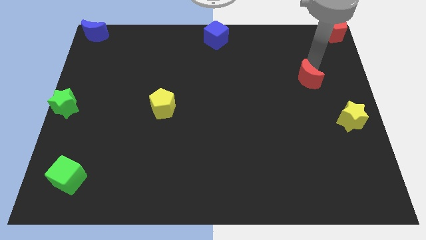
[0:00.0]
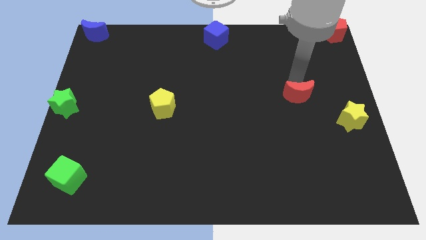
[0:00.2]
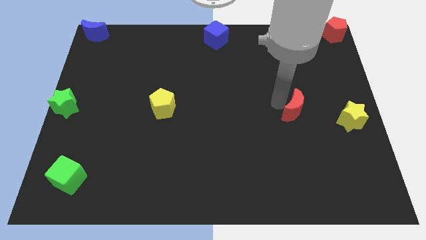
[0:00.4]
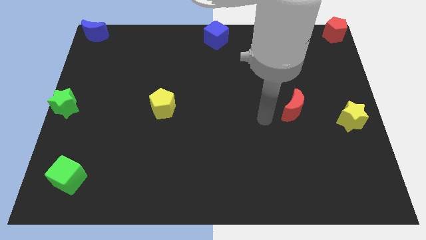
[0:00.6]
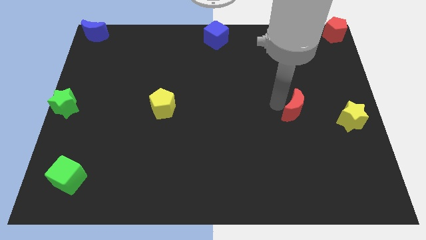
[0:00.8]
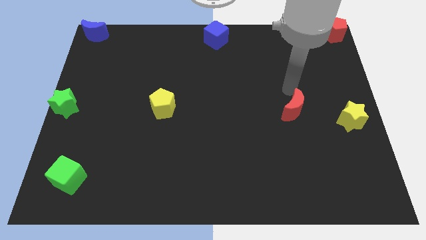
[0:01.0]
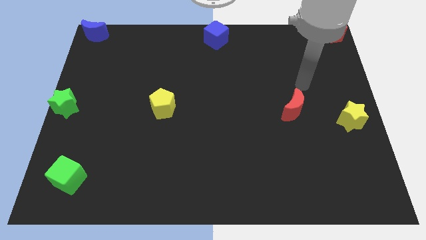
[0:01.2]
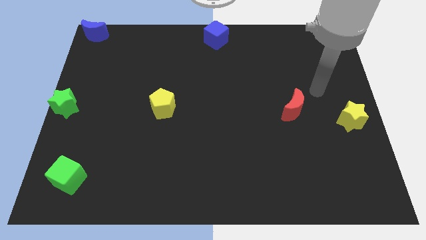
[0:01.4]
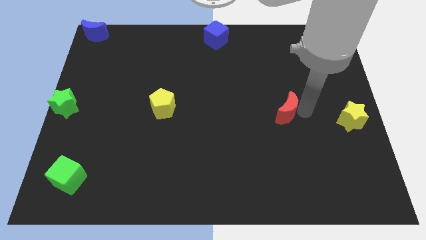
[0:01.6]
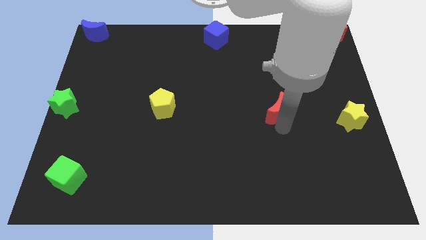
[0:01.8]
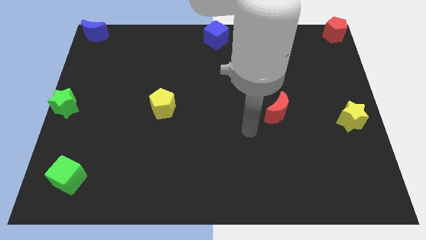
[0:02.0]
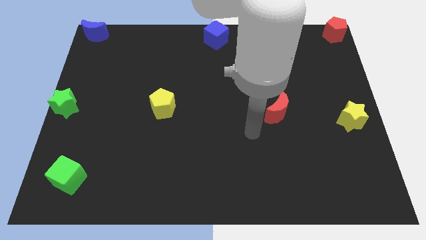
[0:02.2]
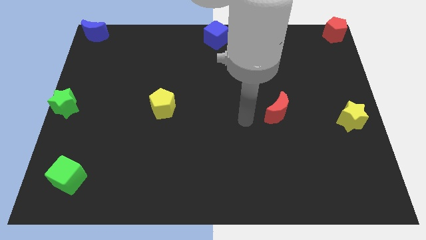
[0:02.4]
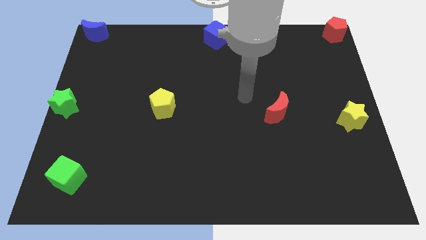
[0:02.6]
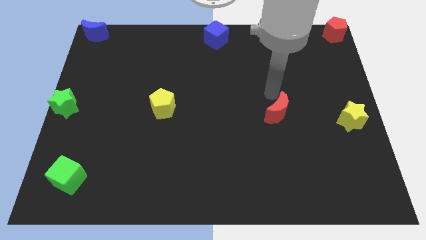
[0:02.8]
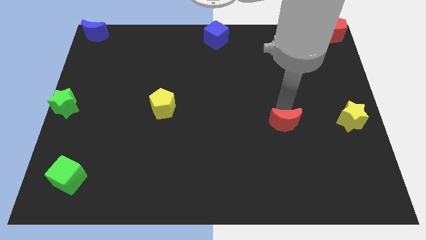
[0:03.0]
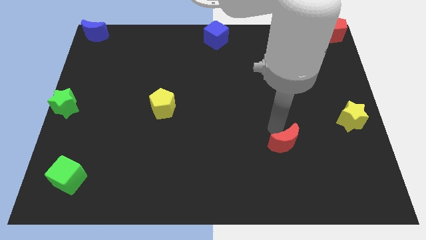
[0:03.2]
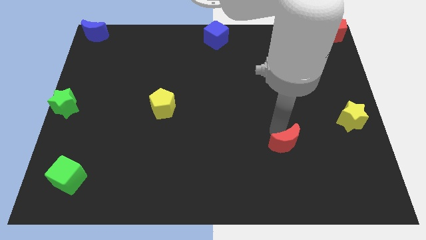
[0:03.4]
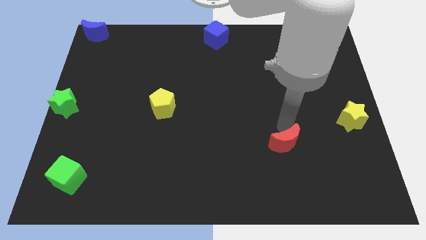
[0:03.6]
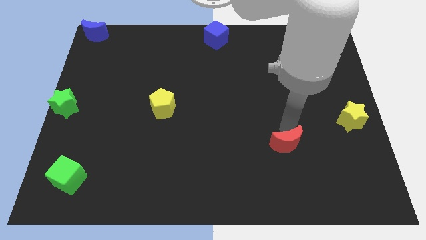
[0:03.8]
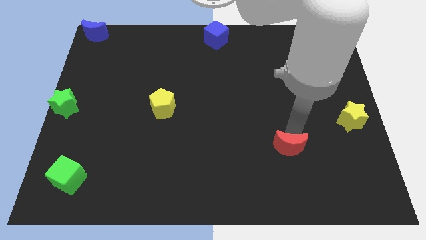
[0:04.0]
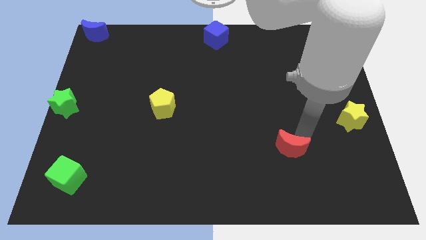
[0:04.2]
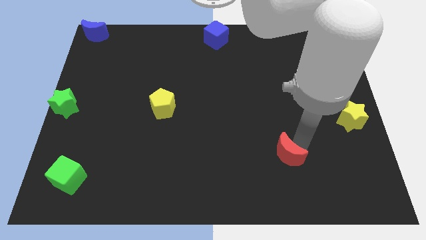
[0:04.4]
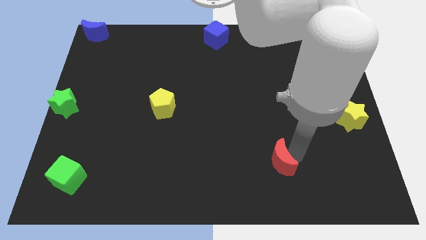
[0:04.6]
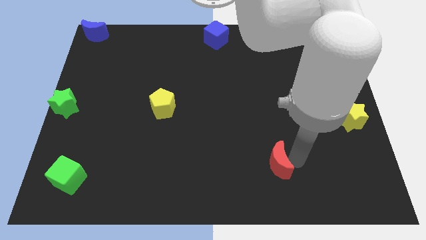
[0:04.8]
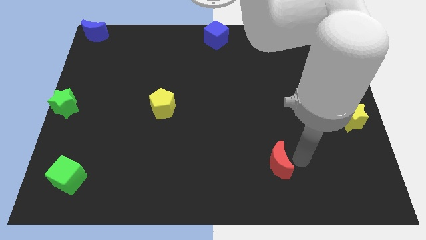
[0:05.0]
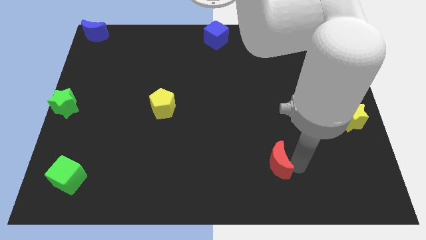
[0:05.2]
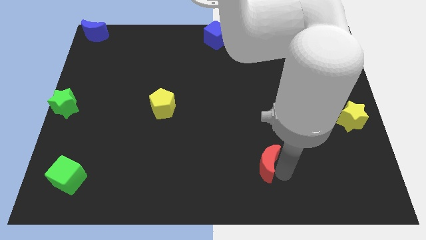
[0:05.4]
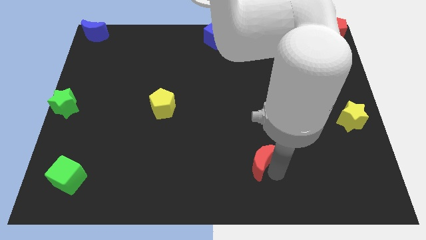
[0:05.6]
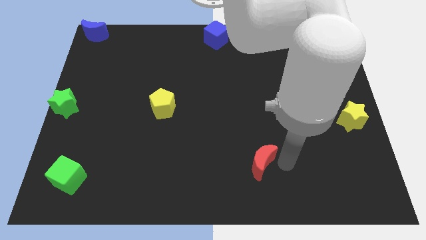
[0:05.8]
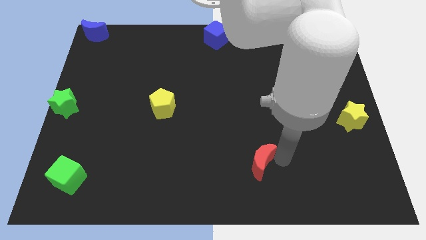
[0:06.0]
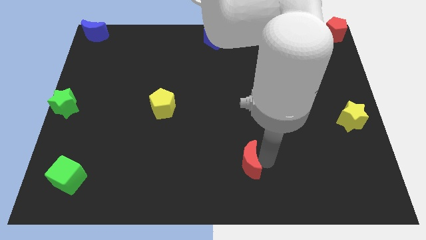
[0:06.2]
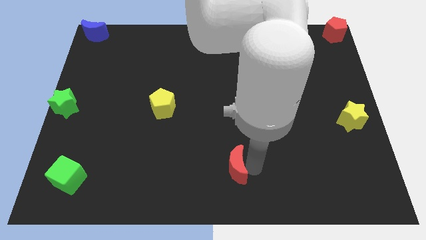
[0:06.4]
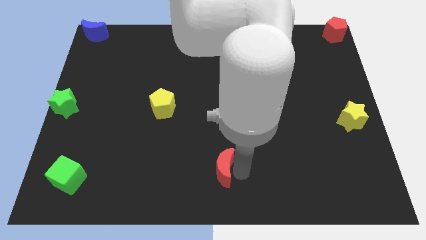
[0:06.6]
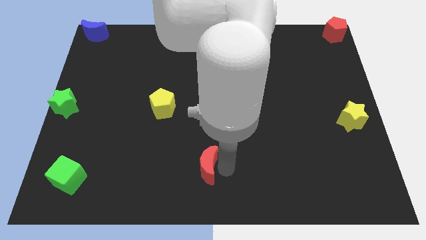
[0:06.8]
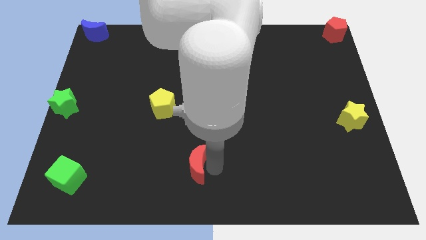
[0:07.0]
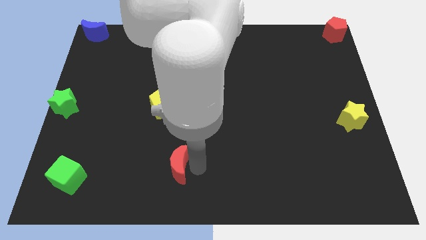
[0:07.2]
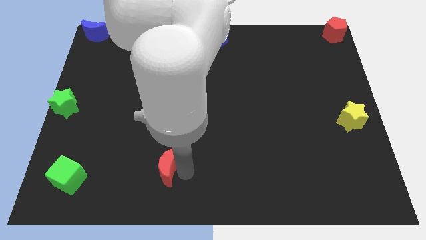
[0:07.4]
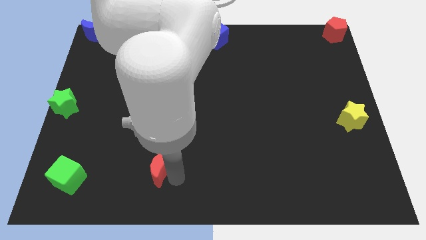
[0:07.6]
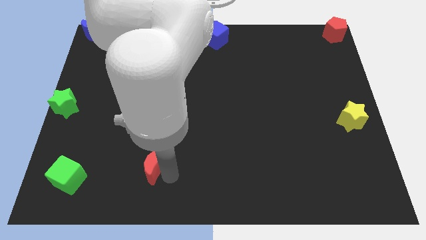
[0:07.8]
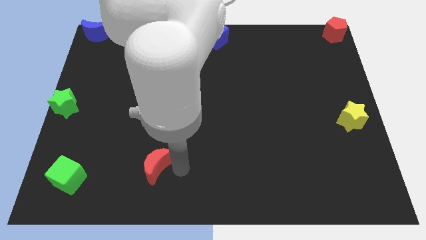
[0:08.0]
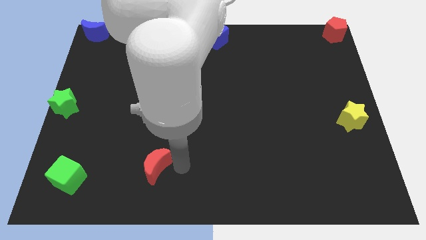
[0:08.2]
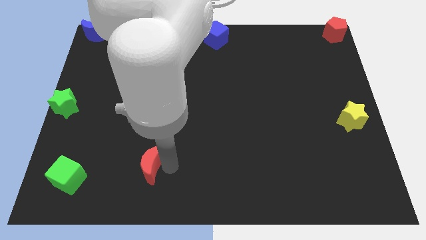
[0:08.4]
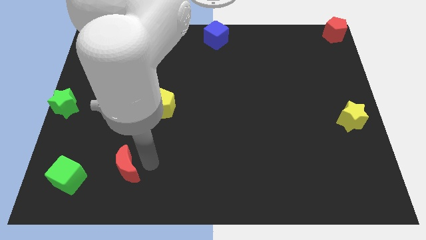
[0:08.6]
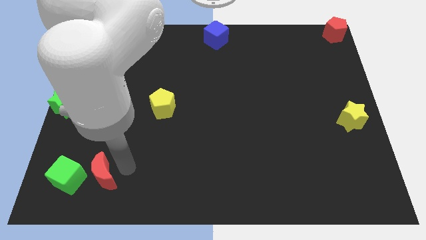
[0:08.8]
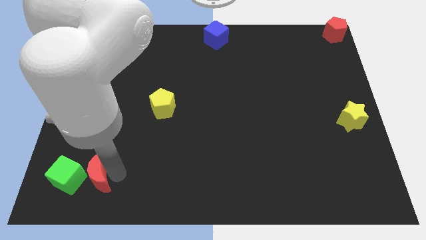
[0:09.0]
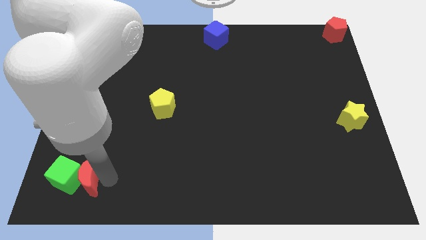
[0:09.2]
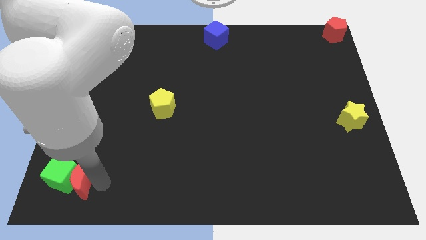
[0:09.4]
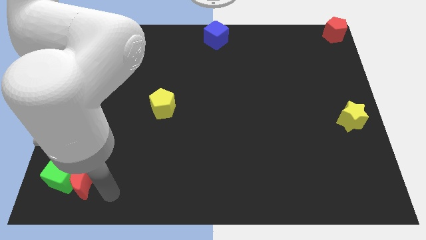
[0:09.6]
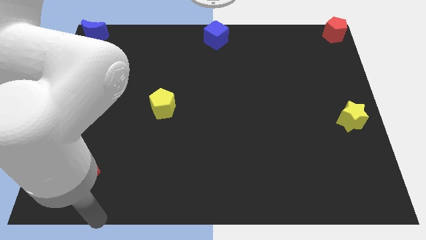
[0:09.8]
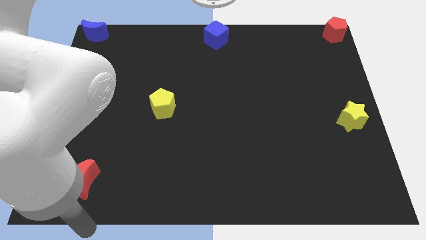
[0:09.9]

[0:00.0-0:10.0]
push the red moon into the green cube

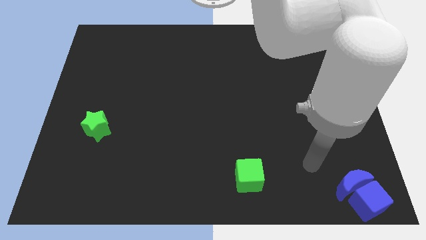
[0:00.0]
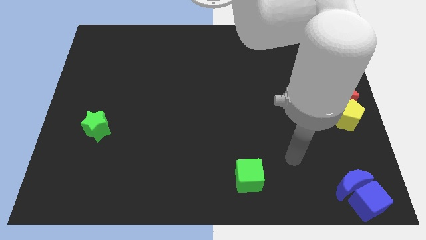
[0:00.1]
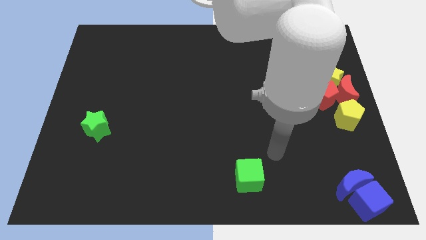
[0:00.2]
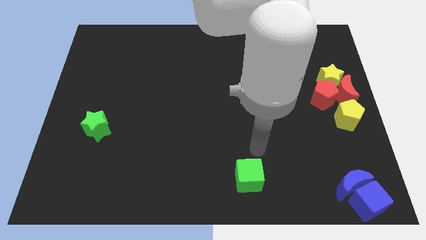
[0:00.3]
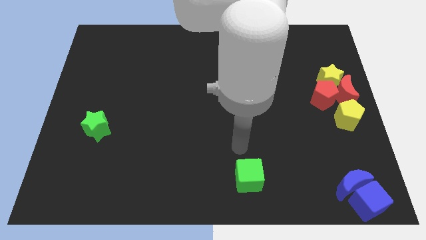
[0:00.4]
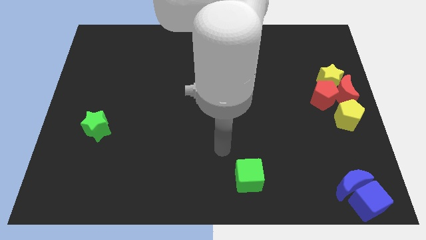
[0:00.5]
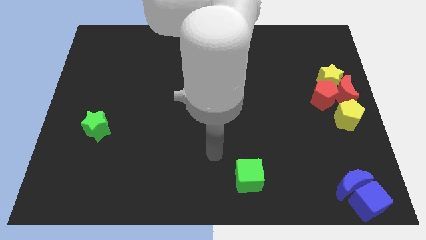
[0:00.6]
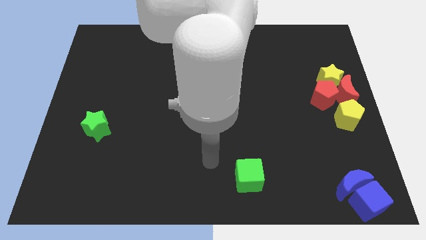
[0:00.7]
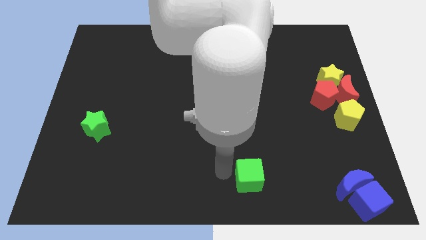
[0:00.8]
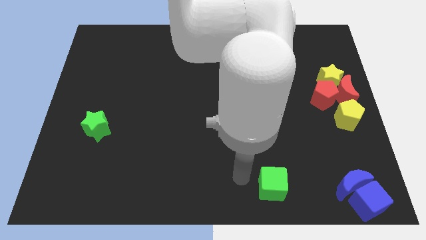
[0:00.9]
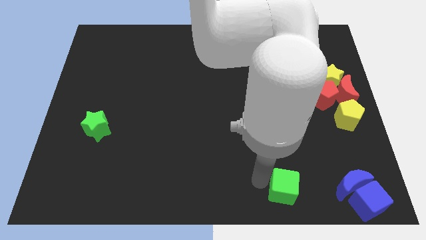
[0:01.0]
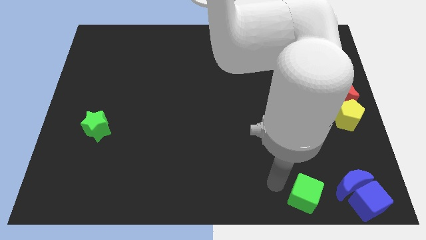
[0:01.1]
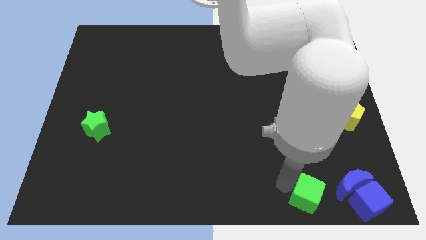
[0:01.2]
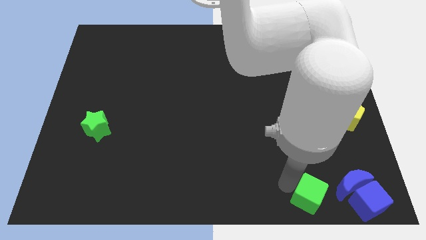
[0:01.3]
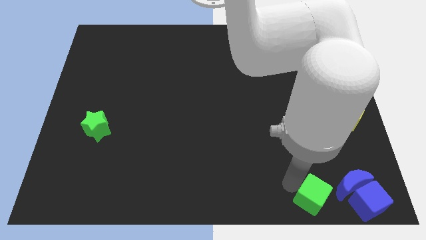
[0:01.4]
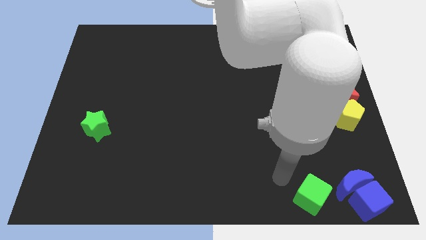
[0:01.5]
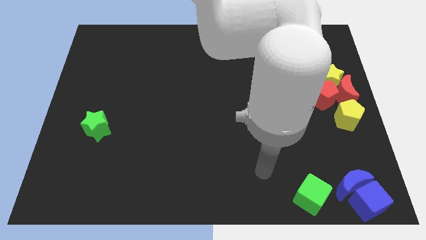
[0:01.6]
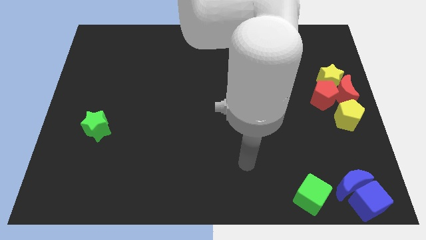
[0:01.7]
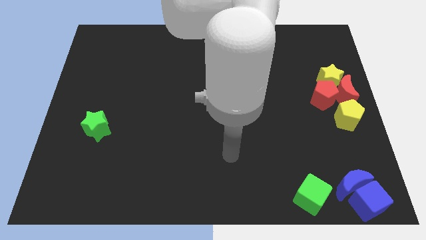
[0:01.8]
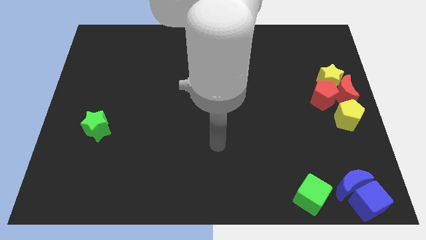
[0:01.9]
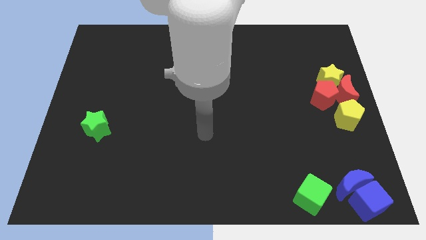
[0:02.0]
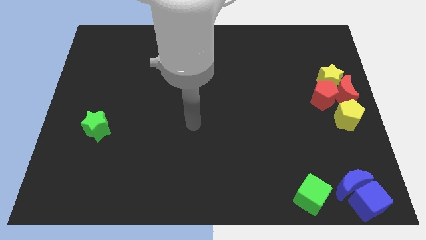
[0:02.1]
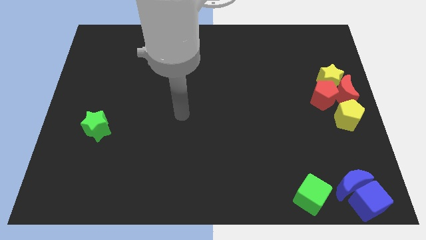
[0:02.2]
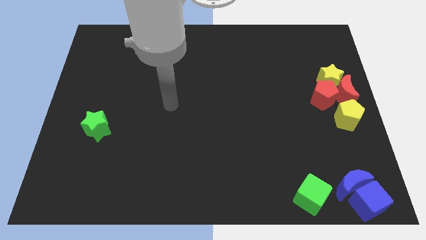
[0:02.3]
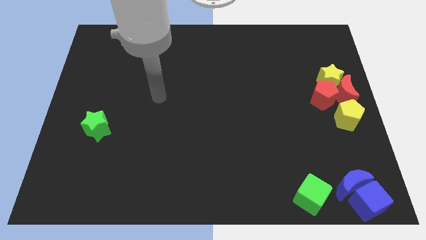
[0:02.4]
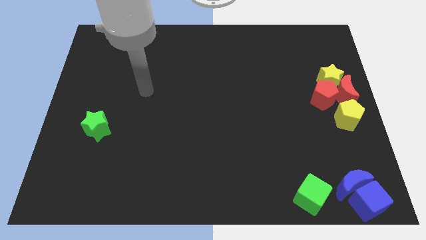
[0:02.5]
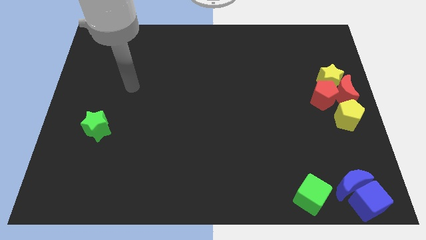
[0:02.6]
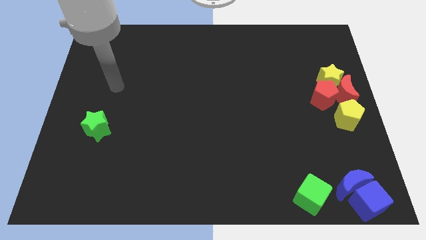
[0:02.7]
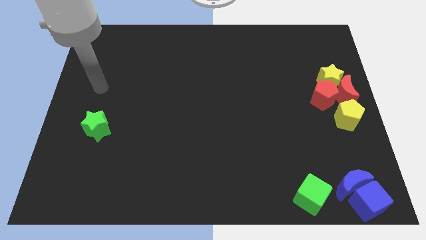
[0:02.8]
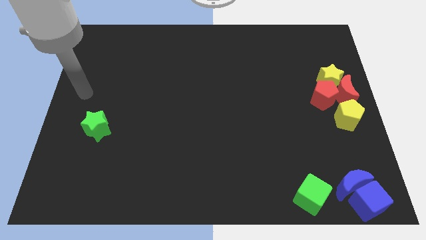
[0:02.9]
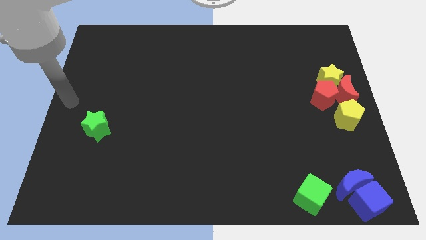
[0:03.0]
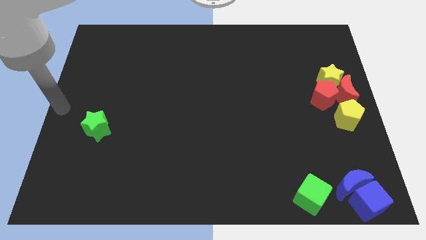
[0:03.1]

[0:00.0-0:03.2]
place the green cube left to the blue cube

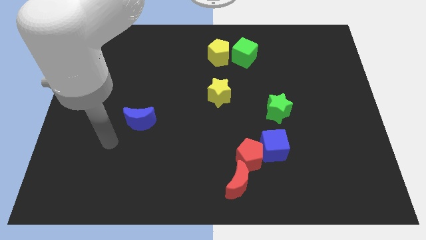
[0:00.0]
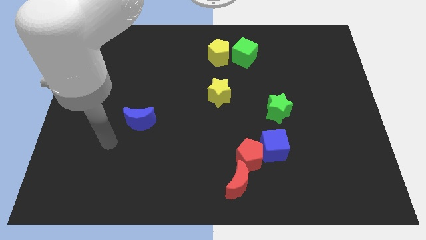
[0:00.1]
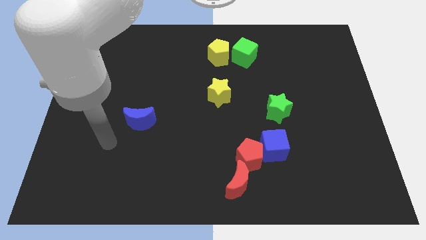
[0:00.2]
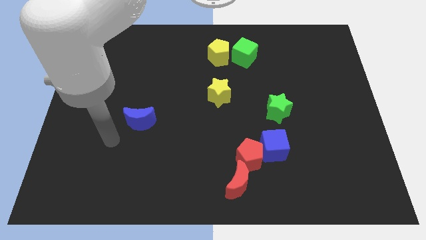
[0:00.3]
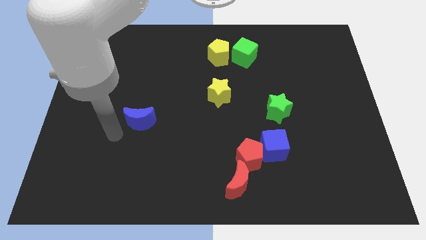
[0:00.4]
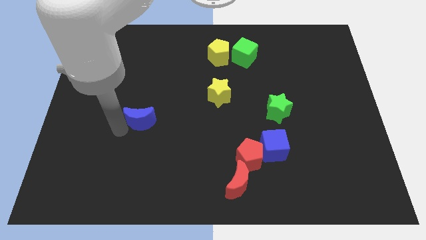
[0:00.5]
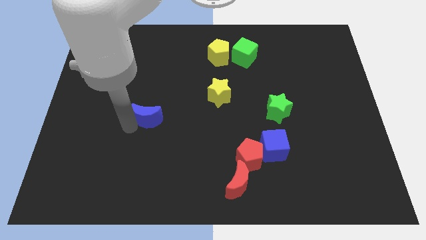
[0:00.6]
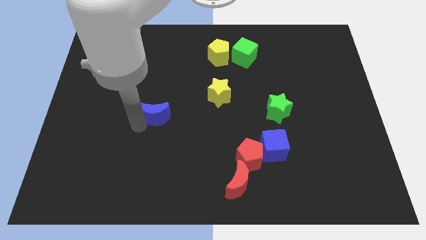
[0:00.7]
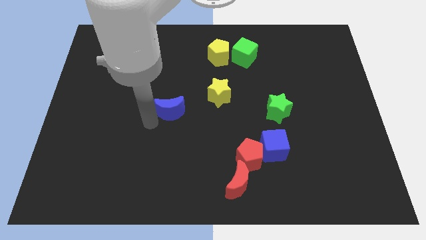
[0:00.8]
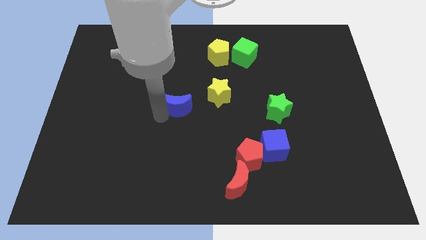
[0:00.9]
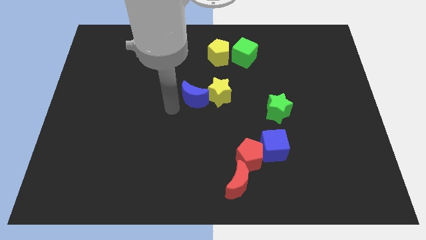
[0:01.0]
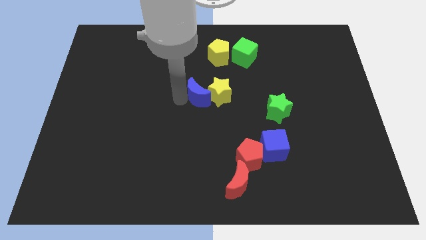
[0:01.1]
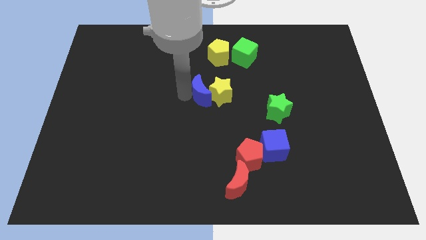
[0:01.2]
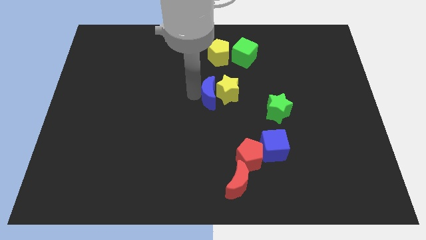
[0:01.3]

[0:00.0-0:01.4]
push the blue moon to the left side of the yellow star
